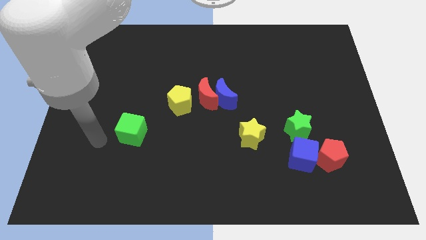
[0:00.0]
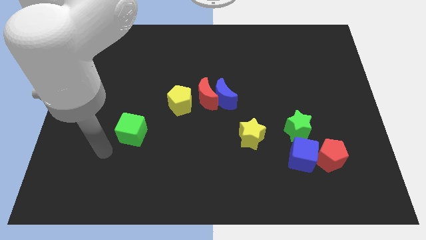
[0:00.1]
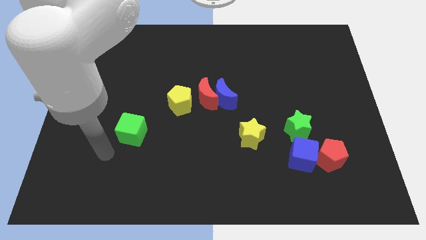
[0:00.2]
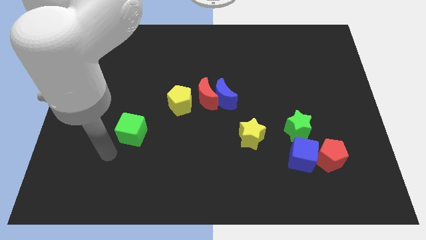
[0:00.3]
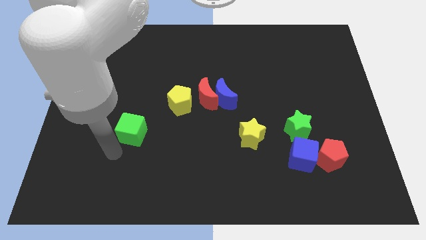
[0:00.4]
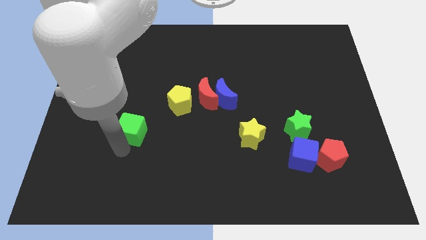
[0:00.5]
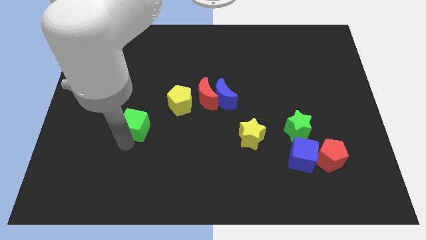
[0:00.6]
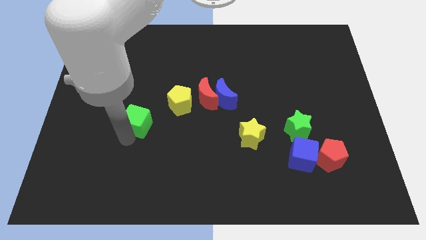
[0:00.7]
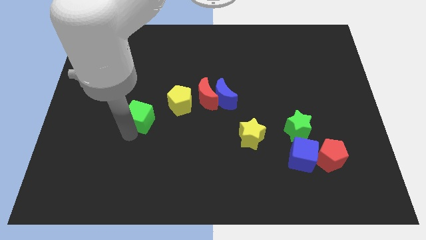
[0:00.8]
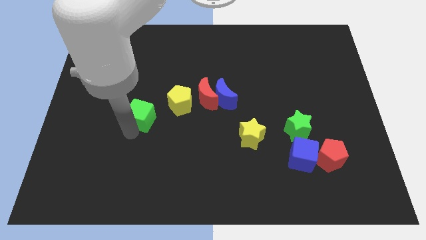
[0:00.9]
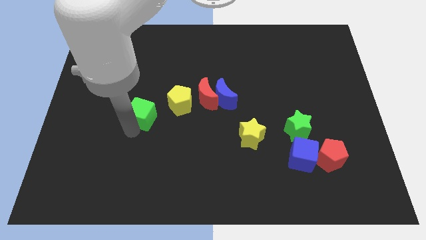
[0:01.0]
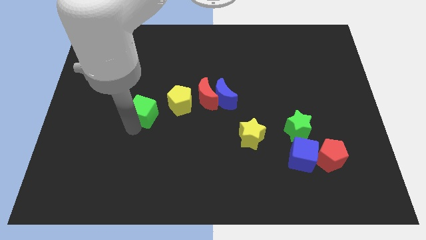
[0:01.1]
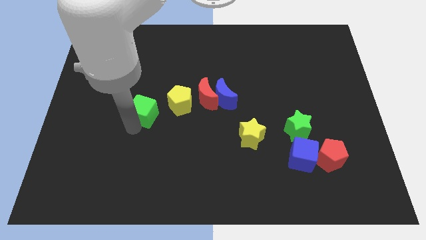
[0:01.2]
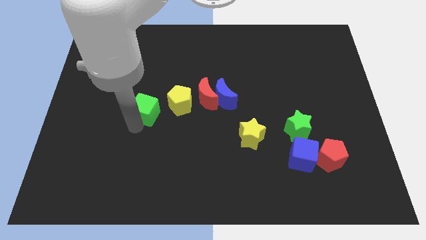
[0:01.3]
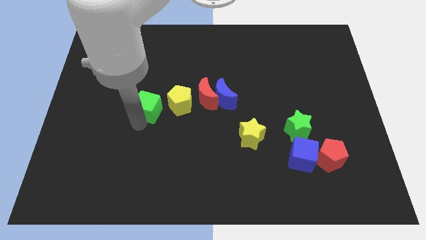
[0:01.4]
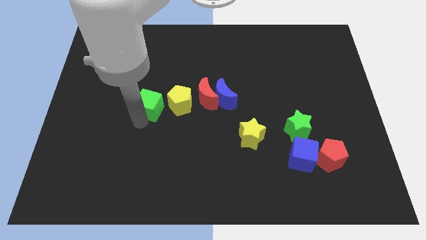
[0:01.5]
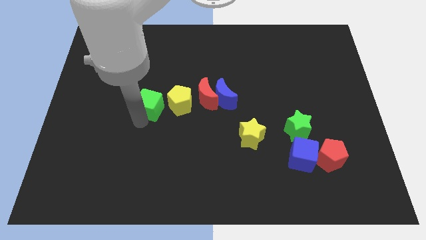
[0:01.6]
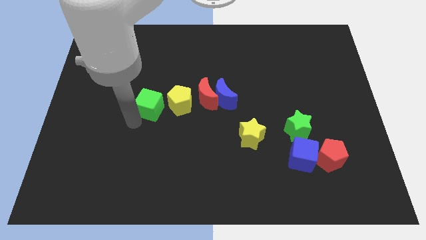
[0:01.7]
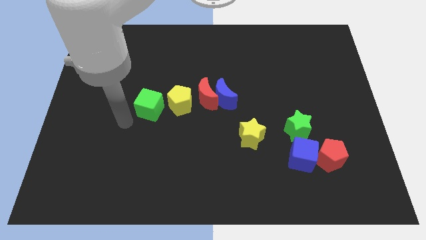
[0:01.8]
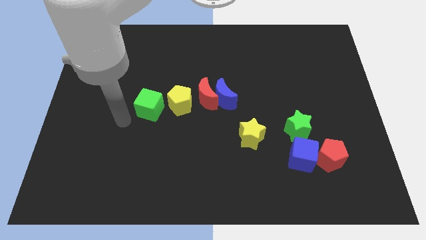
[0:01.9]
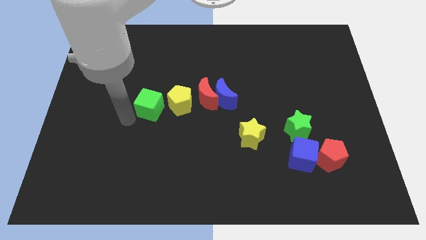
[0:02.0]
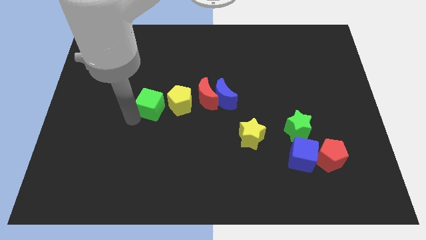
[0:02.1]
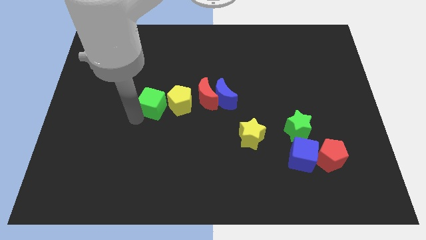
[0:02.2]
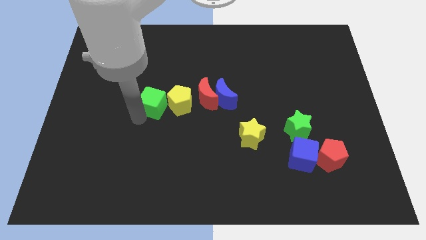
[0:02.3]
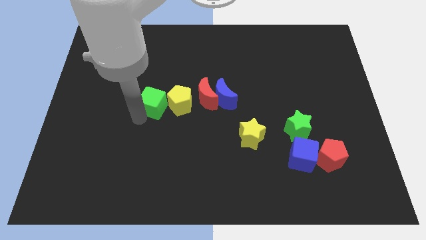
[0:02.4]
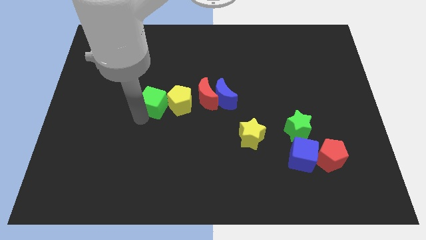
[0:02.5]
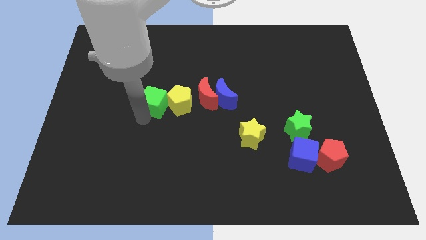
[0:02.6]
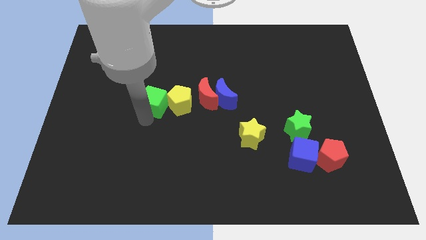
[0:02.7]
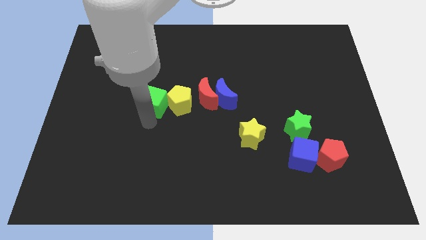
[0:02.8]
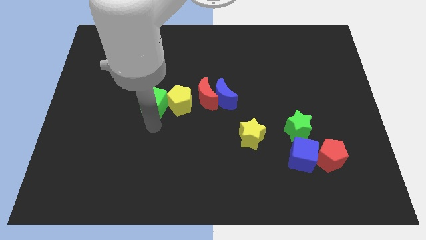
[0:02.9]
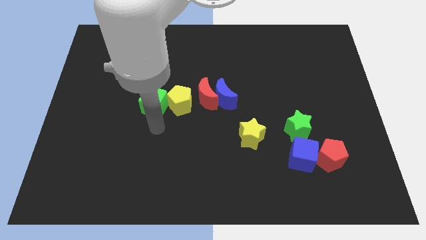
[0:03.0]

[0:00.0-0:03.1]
slide green cube into left of yellow pentagon

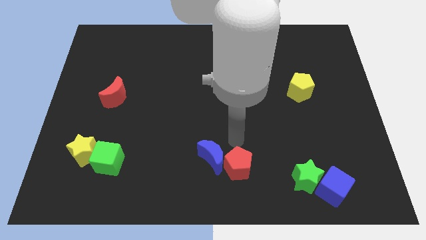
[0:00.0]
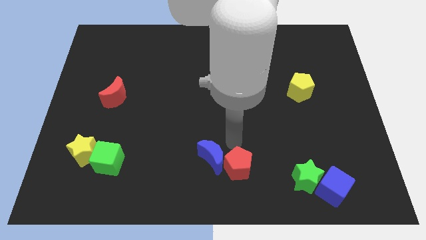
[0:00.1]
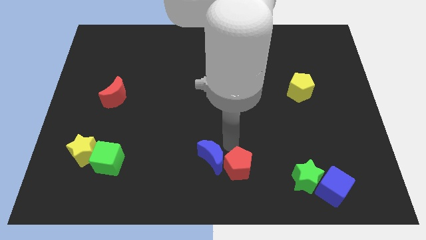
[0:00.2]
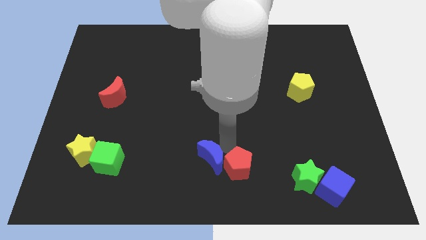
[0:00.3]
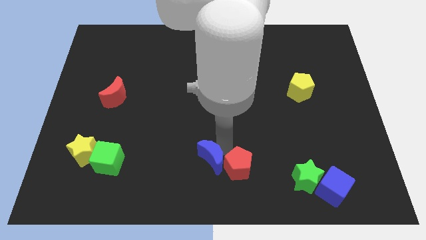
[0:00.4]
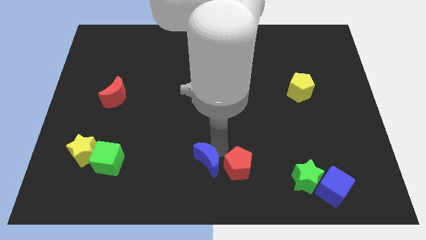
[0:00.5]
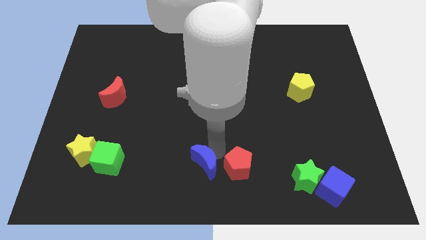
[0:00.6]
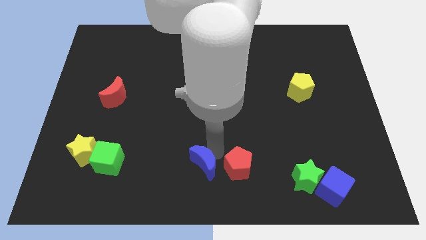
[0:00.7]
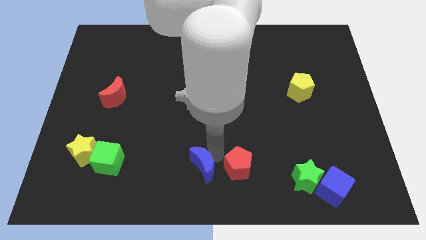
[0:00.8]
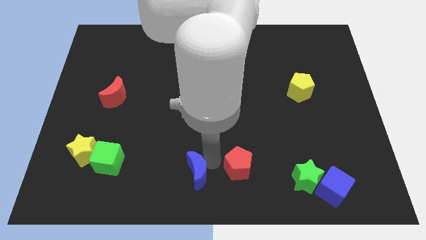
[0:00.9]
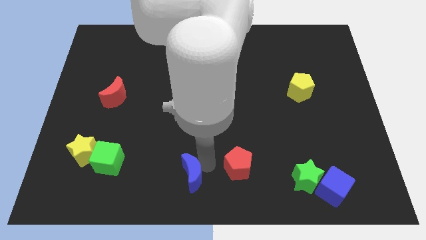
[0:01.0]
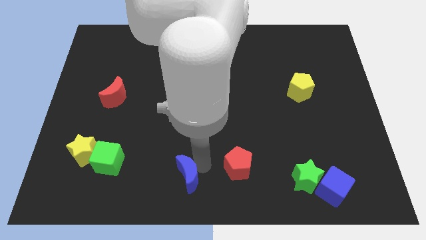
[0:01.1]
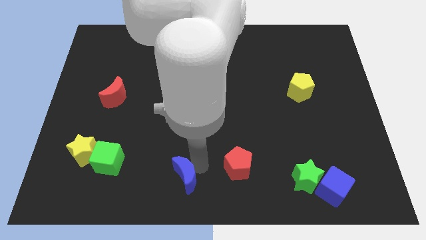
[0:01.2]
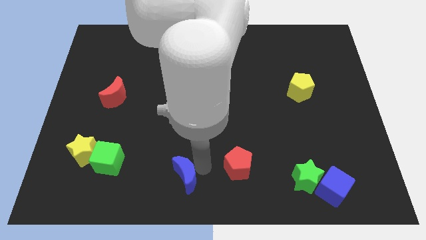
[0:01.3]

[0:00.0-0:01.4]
separate the blue crescent from the red pentagon

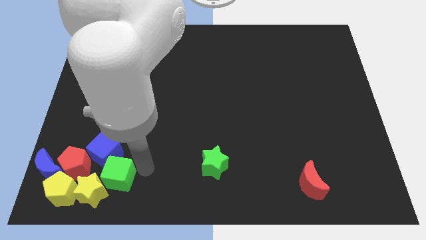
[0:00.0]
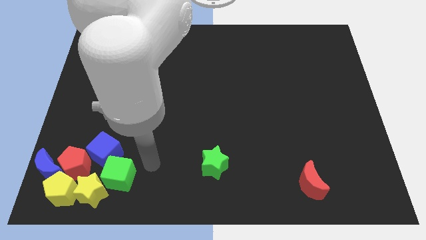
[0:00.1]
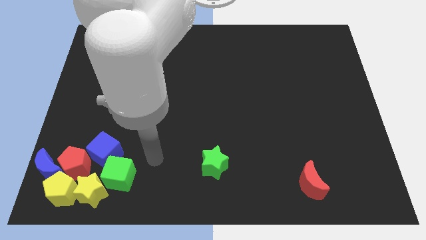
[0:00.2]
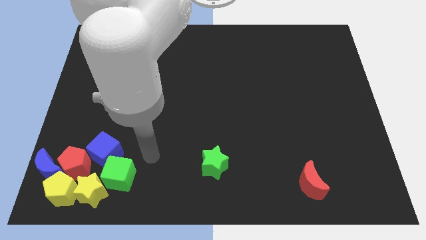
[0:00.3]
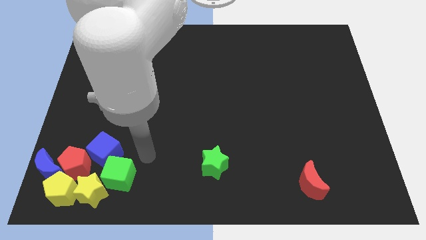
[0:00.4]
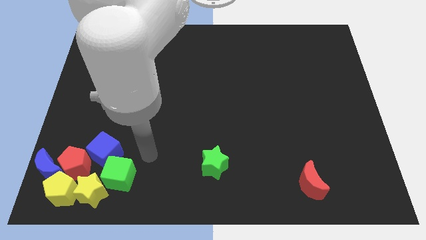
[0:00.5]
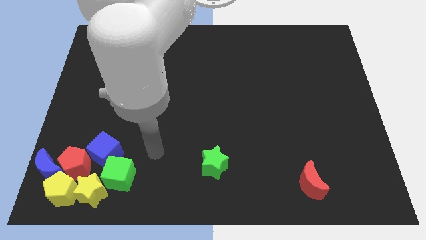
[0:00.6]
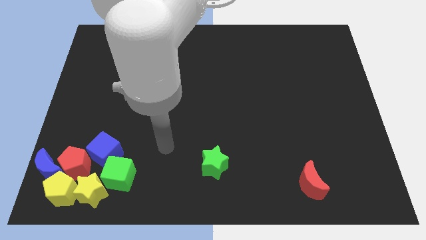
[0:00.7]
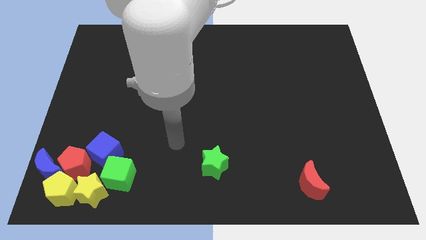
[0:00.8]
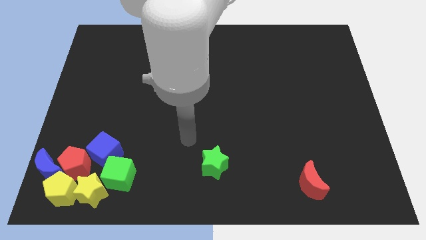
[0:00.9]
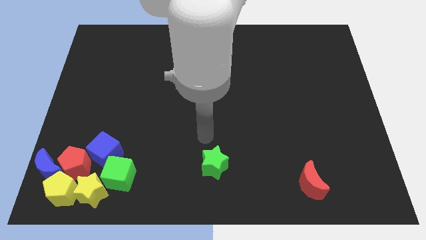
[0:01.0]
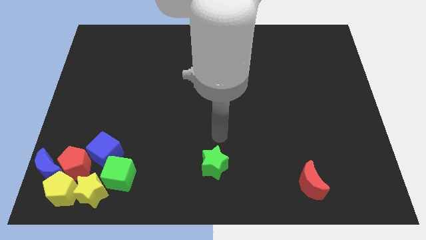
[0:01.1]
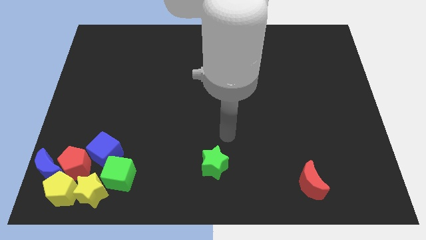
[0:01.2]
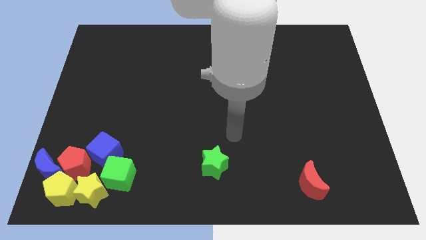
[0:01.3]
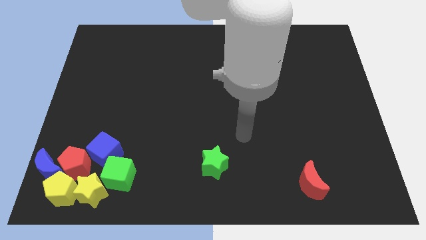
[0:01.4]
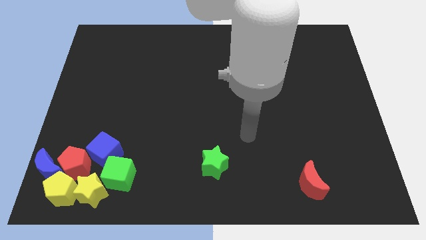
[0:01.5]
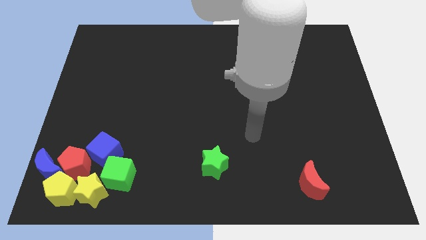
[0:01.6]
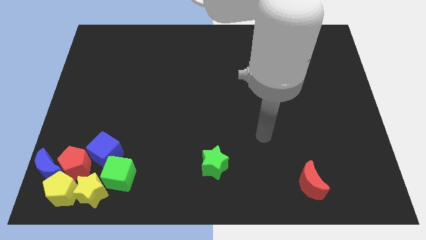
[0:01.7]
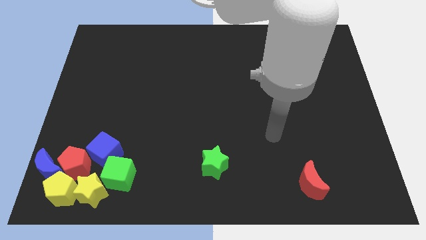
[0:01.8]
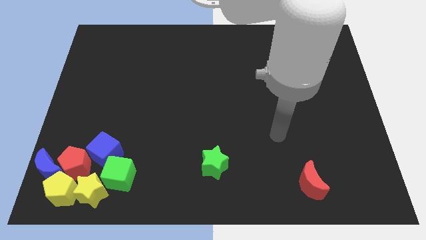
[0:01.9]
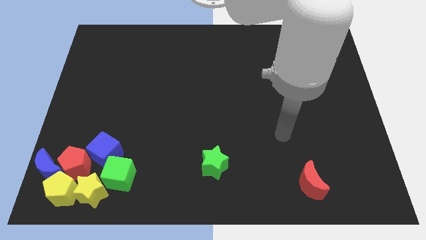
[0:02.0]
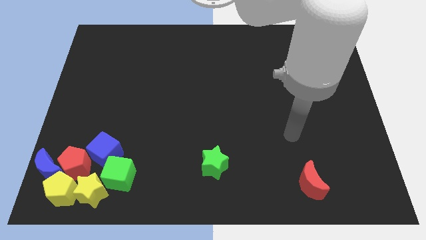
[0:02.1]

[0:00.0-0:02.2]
move away from the green cube

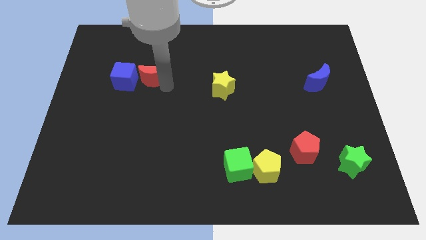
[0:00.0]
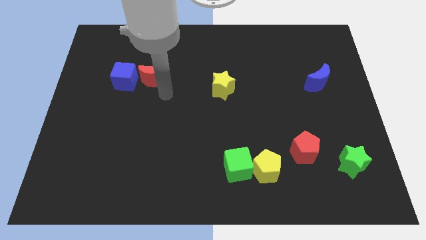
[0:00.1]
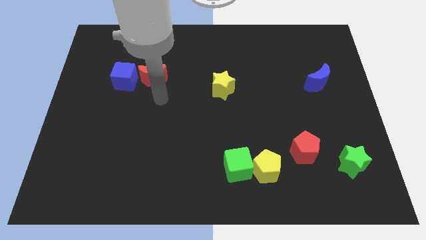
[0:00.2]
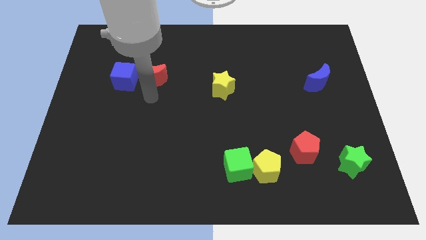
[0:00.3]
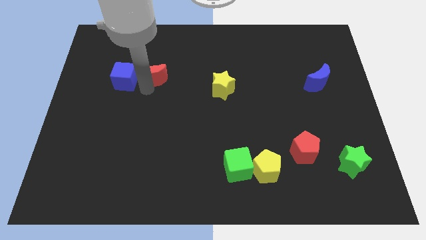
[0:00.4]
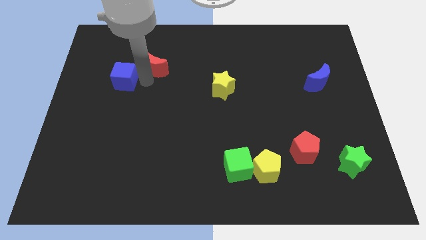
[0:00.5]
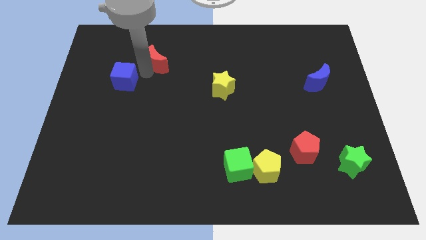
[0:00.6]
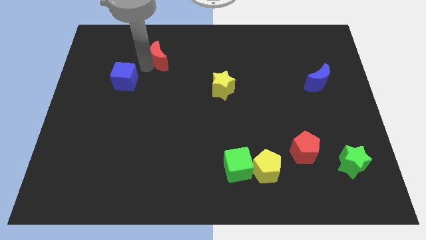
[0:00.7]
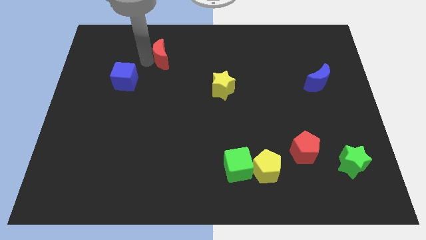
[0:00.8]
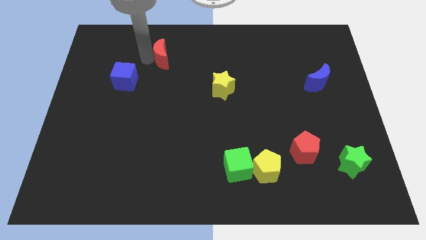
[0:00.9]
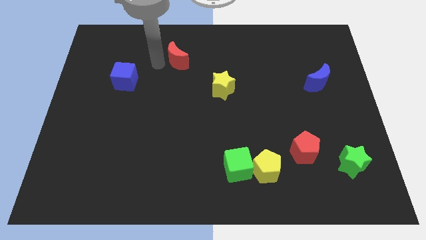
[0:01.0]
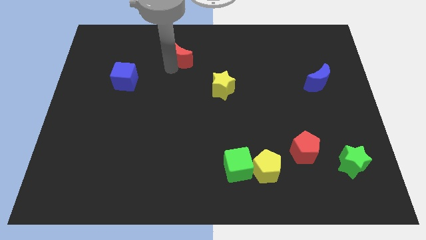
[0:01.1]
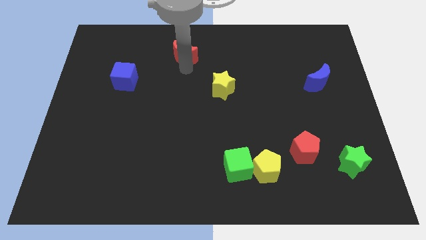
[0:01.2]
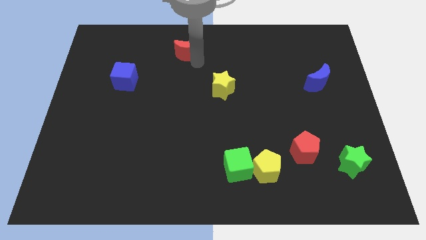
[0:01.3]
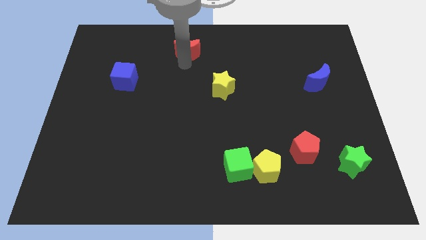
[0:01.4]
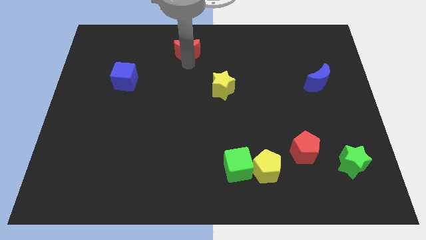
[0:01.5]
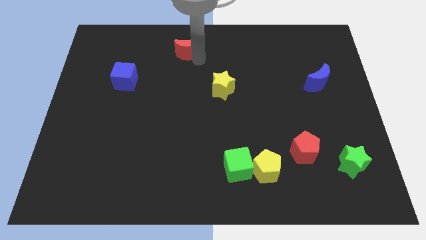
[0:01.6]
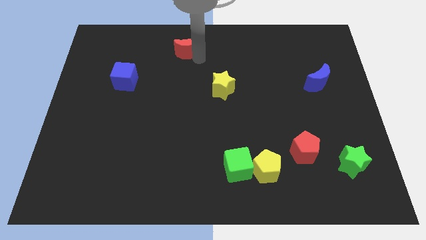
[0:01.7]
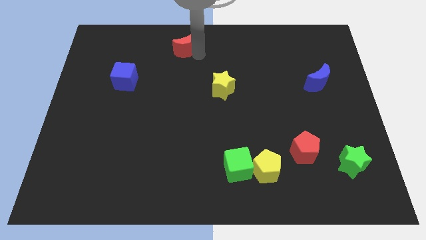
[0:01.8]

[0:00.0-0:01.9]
push the red crescent to the top

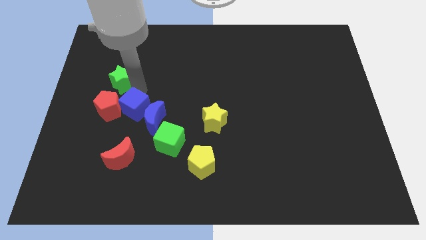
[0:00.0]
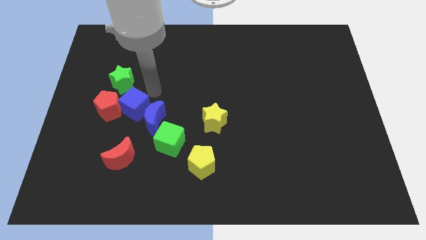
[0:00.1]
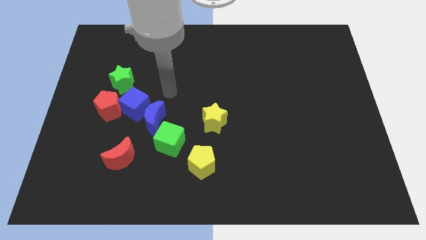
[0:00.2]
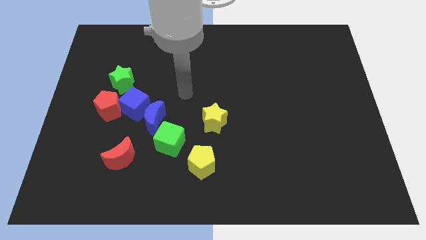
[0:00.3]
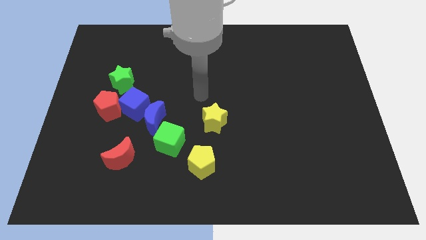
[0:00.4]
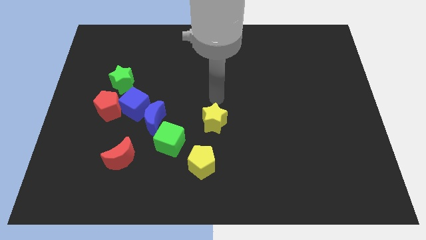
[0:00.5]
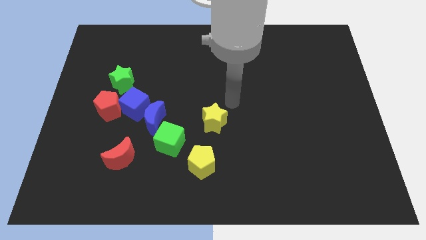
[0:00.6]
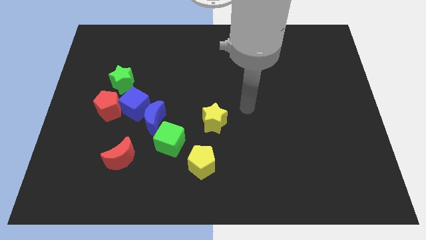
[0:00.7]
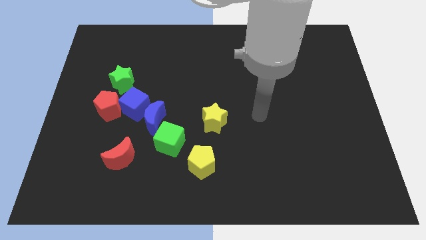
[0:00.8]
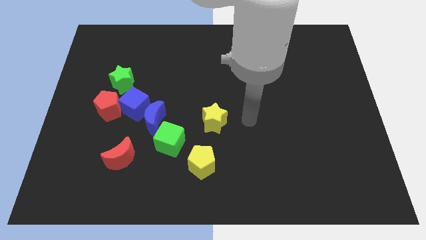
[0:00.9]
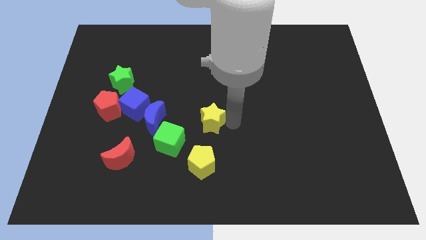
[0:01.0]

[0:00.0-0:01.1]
move your arm away from blue cube
